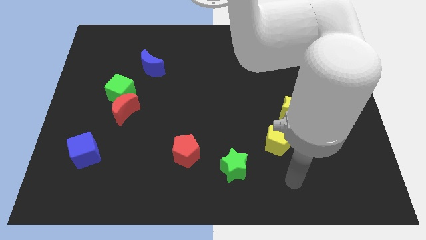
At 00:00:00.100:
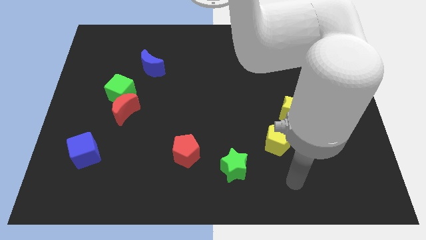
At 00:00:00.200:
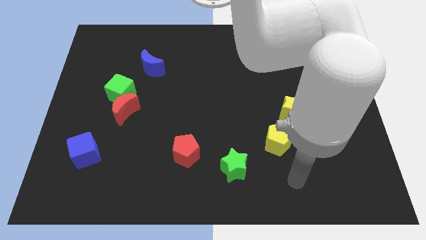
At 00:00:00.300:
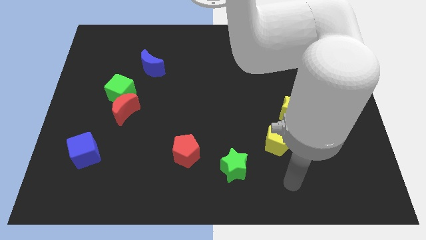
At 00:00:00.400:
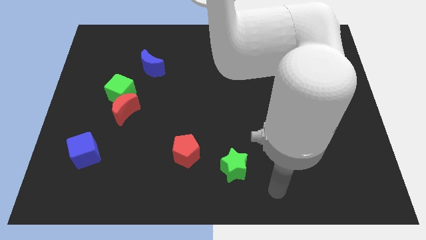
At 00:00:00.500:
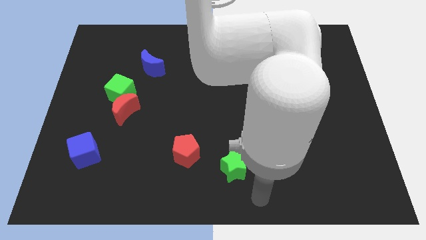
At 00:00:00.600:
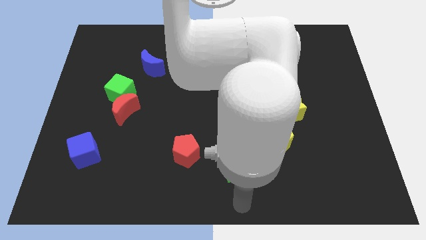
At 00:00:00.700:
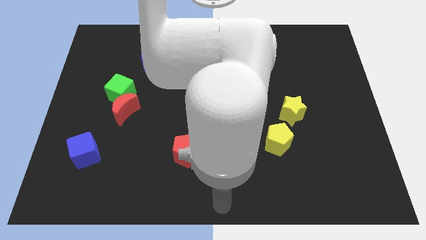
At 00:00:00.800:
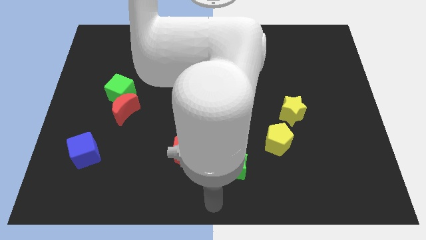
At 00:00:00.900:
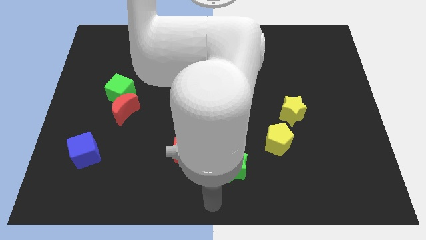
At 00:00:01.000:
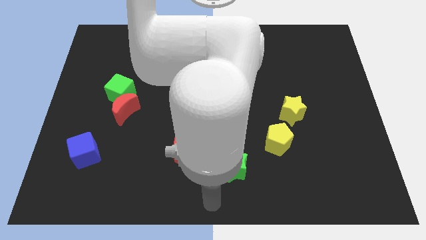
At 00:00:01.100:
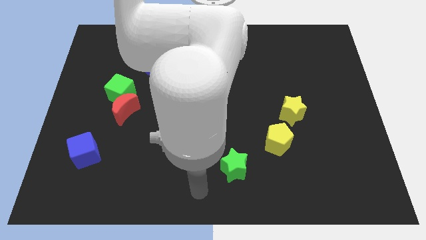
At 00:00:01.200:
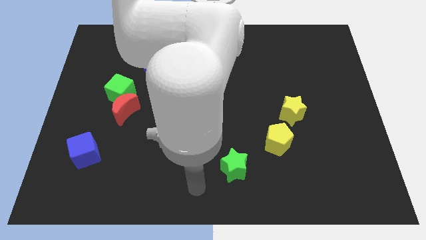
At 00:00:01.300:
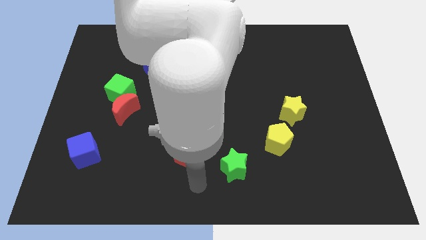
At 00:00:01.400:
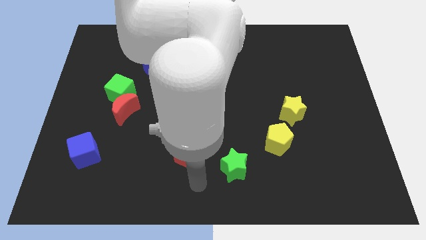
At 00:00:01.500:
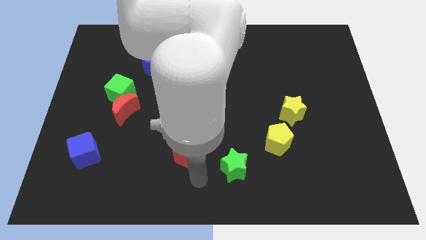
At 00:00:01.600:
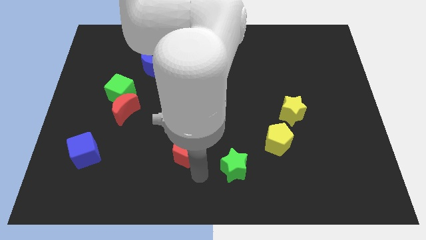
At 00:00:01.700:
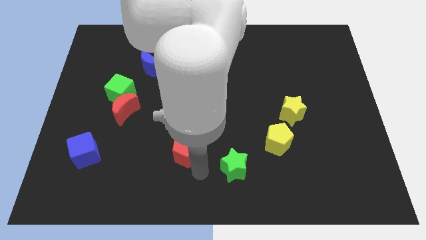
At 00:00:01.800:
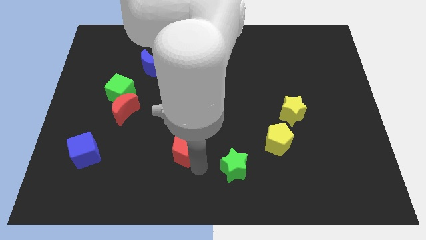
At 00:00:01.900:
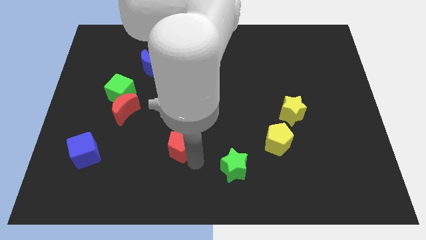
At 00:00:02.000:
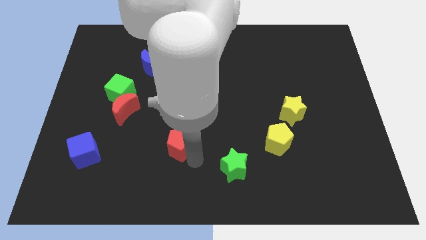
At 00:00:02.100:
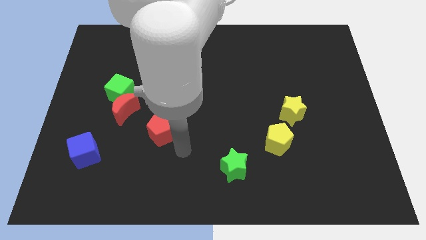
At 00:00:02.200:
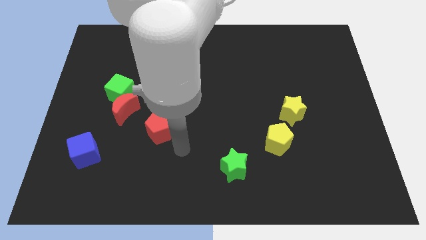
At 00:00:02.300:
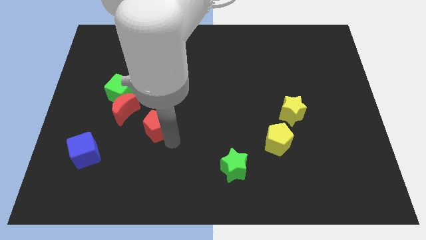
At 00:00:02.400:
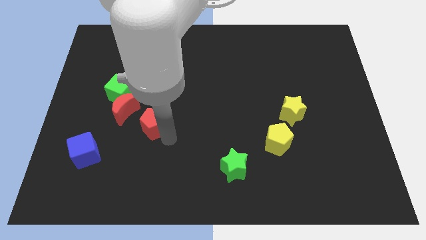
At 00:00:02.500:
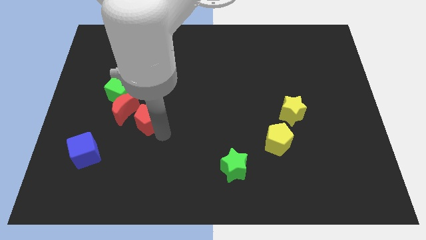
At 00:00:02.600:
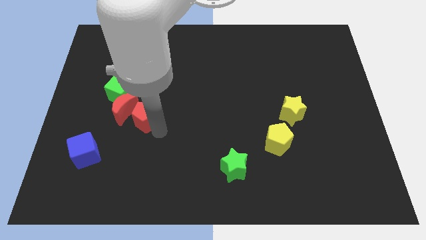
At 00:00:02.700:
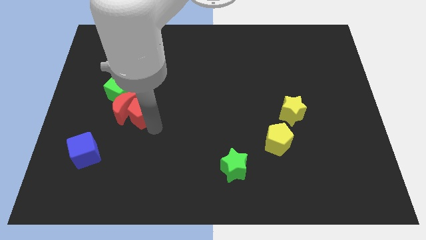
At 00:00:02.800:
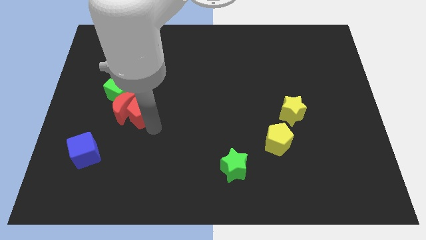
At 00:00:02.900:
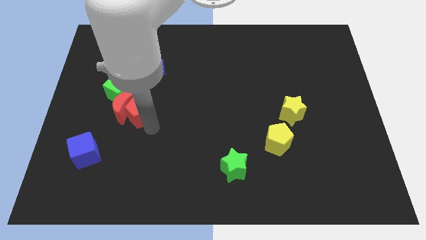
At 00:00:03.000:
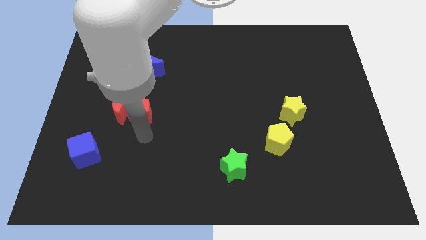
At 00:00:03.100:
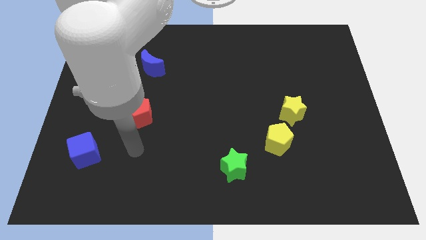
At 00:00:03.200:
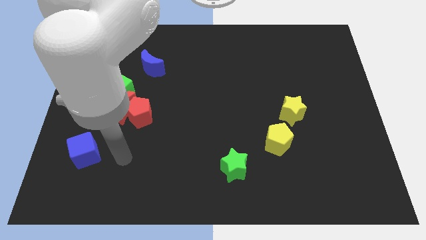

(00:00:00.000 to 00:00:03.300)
push the red pentagon to the right of the red crescent

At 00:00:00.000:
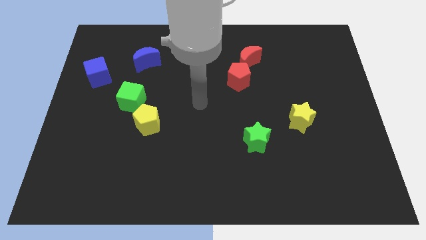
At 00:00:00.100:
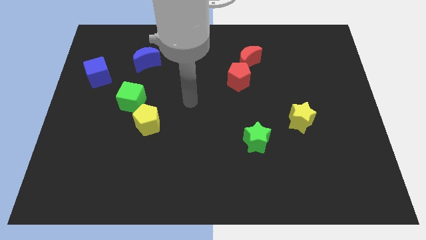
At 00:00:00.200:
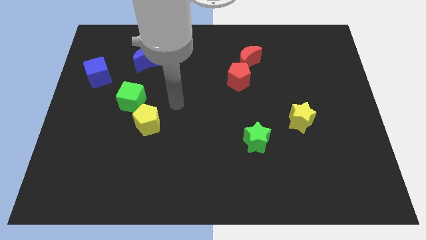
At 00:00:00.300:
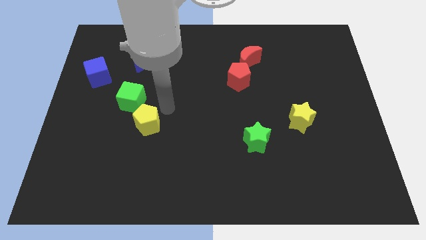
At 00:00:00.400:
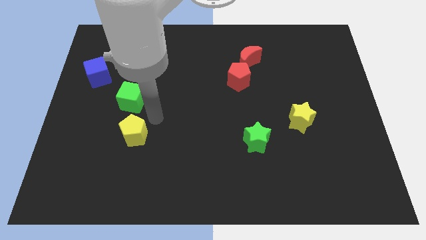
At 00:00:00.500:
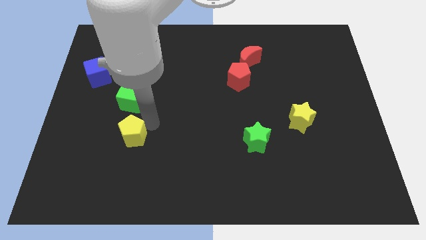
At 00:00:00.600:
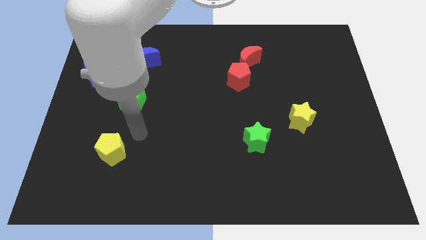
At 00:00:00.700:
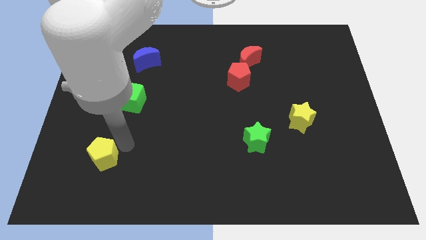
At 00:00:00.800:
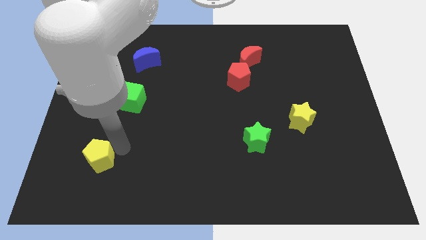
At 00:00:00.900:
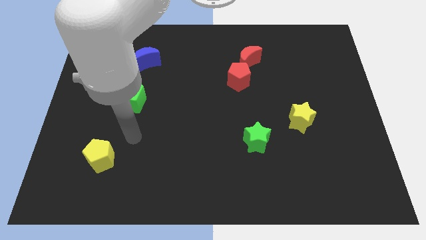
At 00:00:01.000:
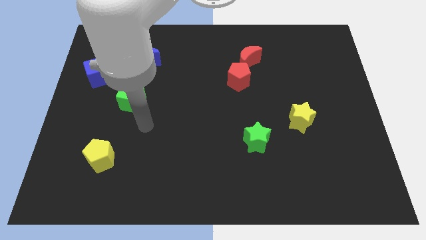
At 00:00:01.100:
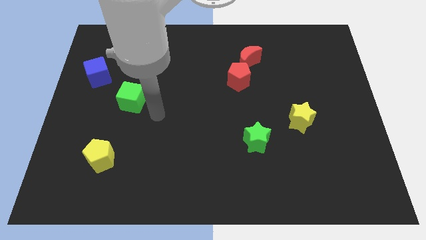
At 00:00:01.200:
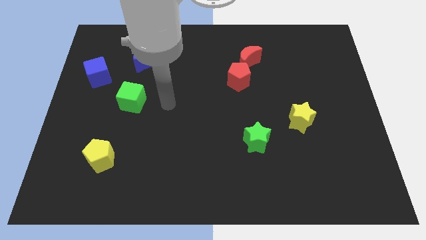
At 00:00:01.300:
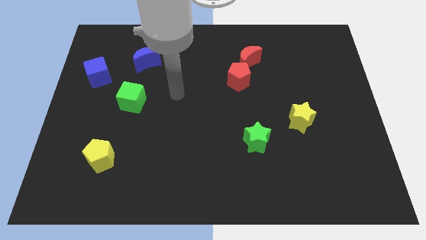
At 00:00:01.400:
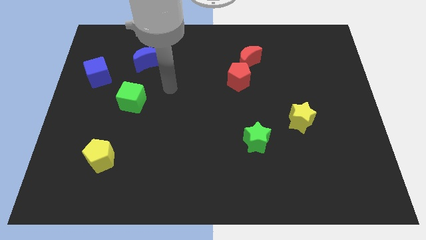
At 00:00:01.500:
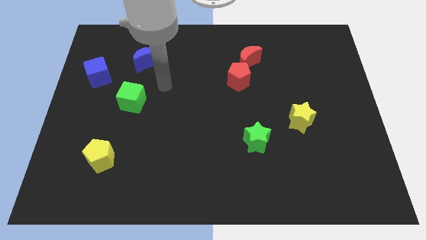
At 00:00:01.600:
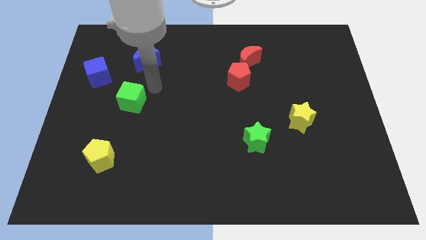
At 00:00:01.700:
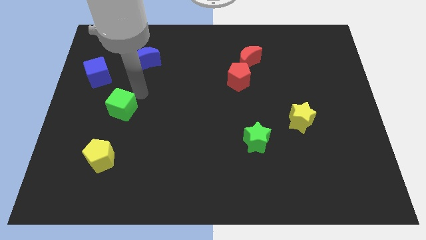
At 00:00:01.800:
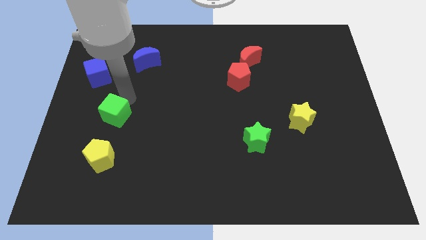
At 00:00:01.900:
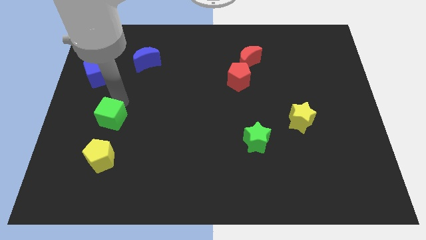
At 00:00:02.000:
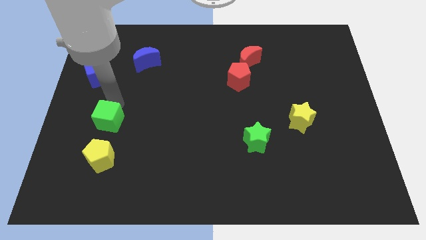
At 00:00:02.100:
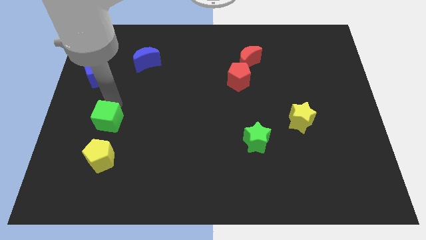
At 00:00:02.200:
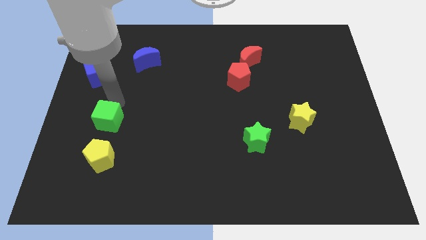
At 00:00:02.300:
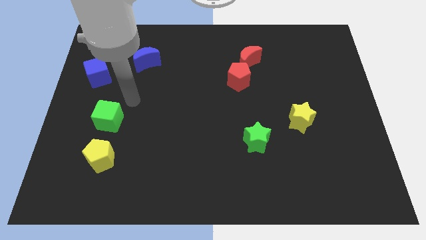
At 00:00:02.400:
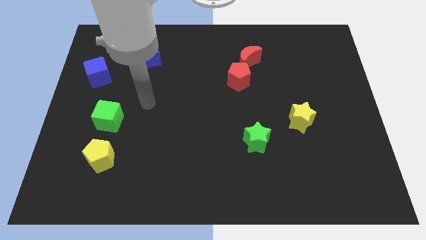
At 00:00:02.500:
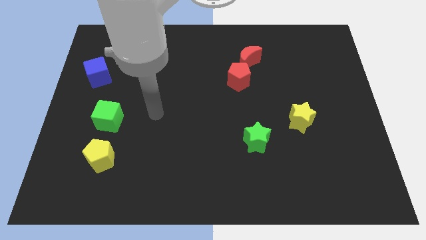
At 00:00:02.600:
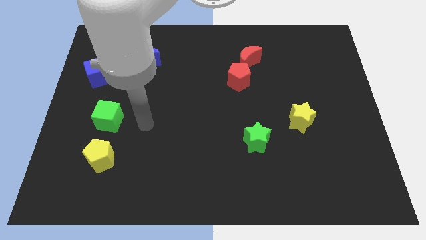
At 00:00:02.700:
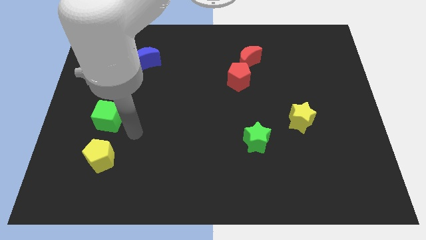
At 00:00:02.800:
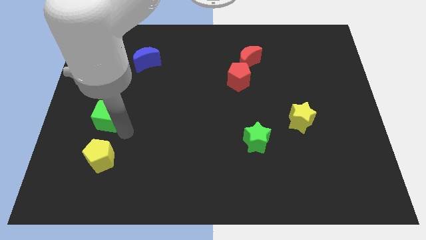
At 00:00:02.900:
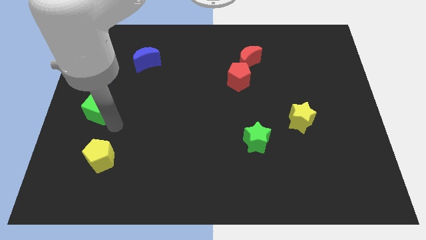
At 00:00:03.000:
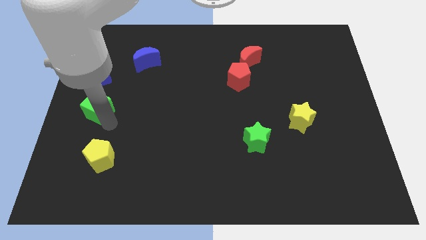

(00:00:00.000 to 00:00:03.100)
separate the yellow pentagon from the green cube

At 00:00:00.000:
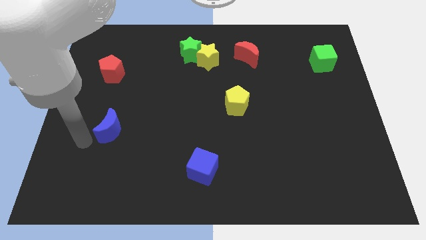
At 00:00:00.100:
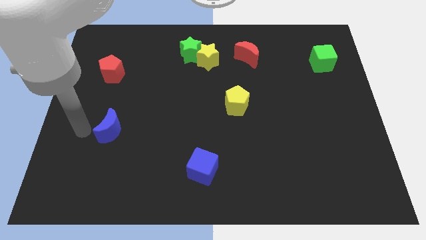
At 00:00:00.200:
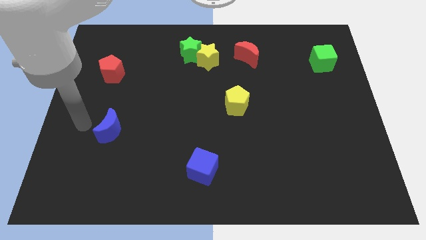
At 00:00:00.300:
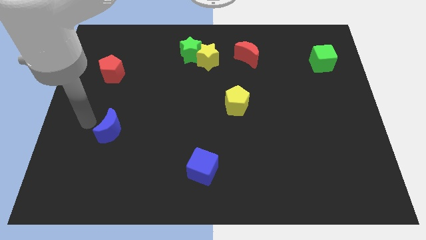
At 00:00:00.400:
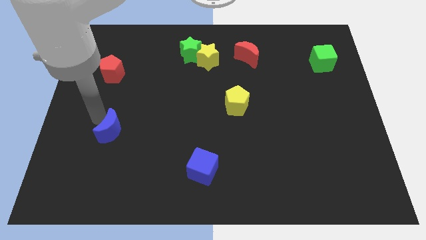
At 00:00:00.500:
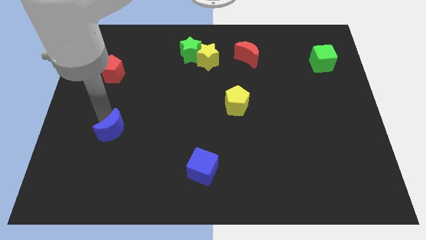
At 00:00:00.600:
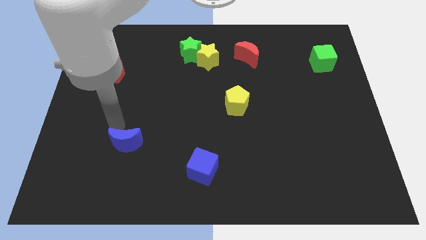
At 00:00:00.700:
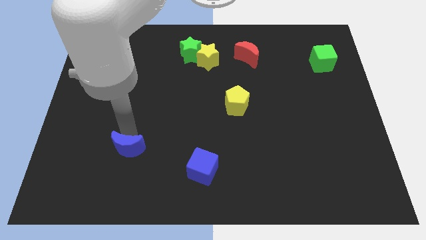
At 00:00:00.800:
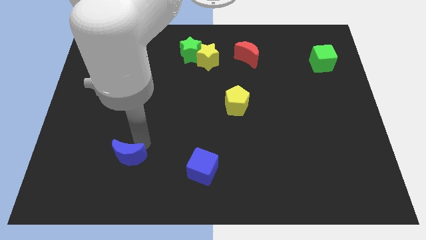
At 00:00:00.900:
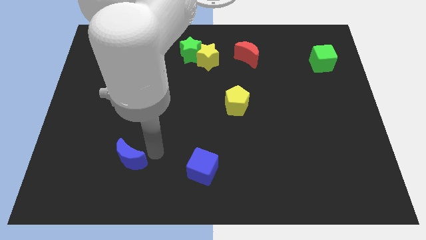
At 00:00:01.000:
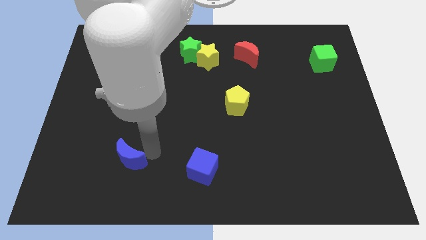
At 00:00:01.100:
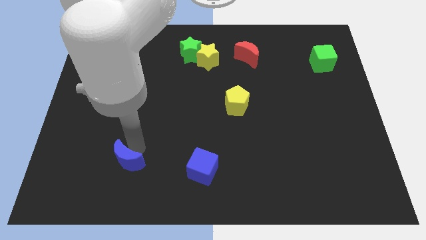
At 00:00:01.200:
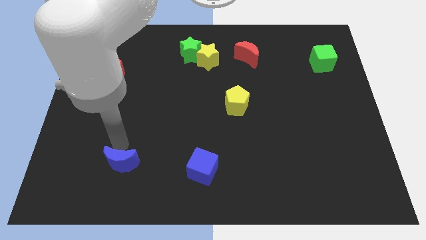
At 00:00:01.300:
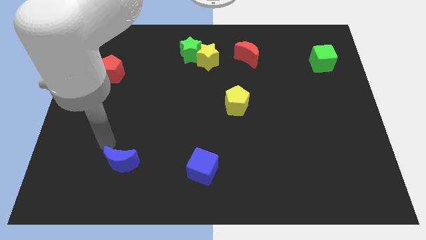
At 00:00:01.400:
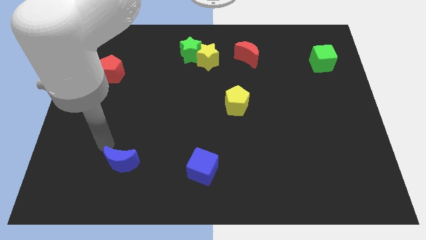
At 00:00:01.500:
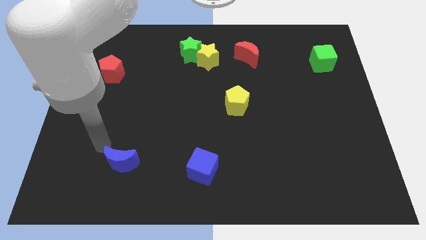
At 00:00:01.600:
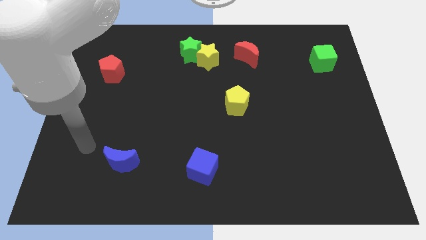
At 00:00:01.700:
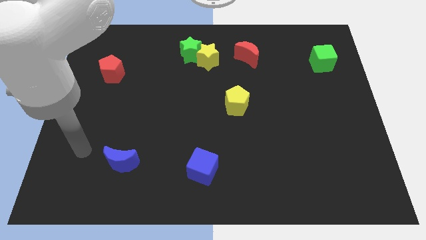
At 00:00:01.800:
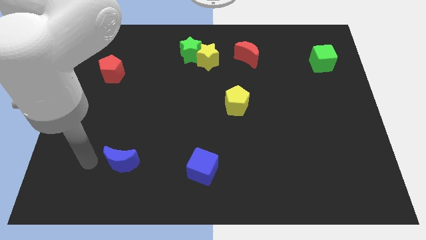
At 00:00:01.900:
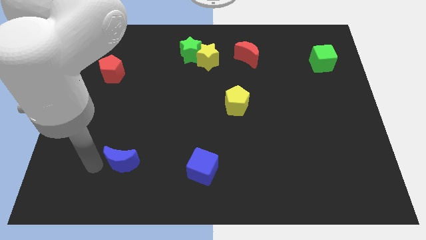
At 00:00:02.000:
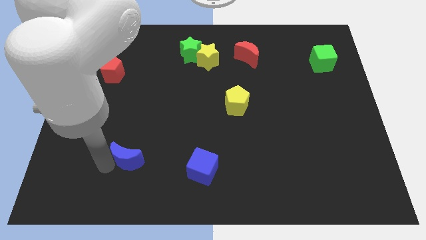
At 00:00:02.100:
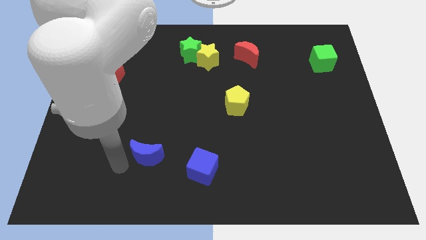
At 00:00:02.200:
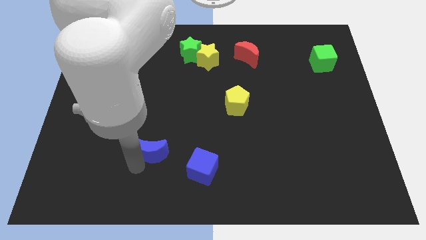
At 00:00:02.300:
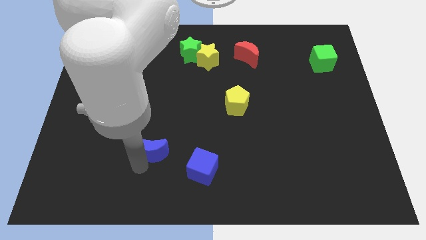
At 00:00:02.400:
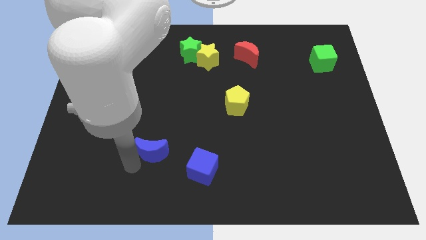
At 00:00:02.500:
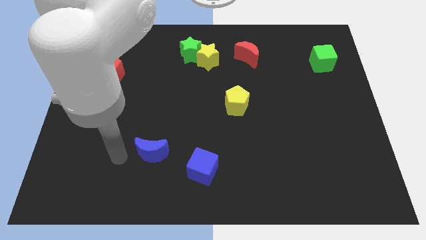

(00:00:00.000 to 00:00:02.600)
push the blue moon towards the blue cube
